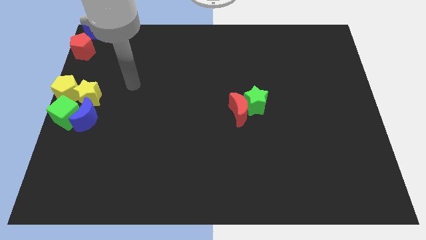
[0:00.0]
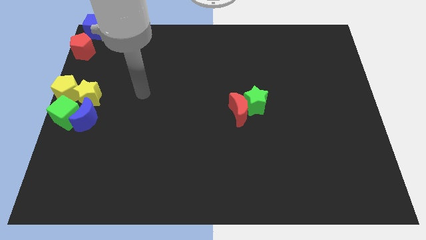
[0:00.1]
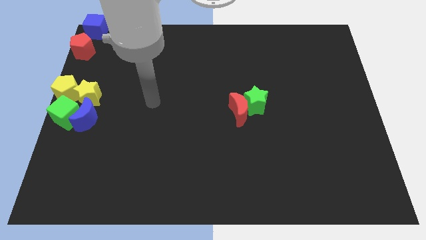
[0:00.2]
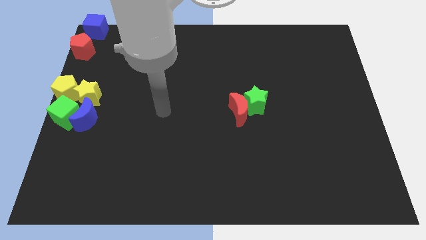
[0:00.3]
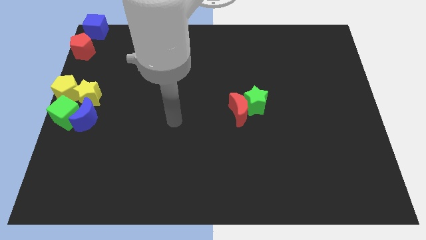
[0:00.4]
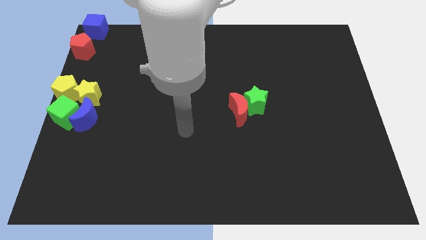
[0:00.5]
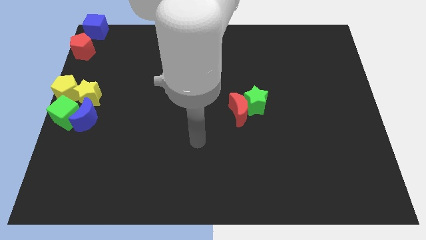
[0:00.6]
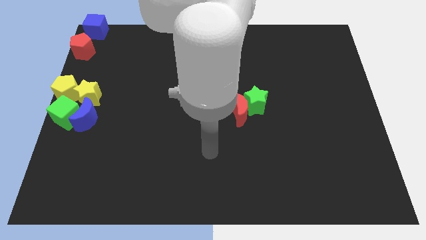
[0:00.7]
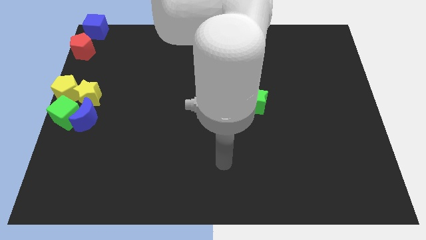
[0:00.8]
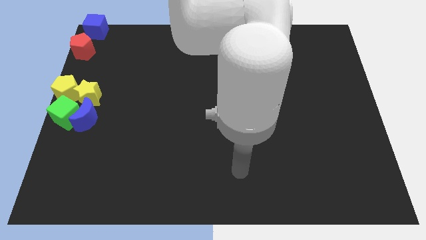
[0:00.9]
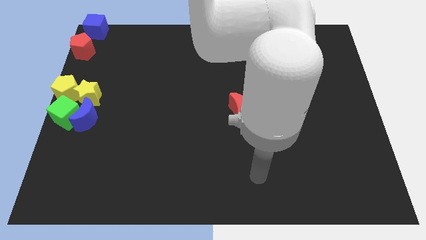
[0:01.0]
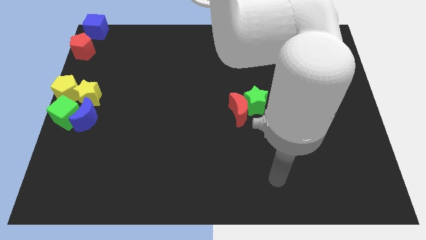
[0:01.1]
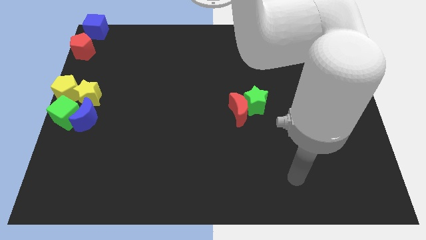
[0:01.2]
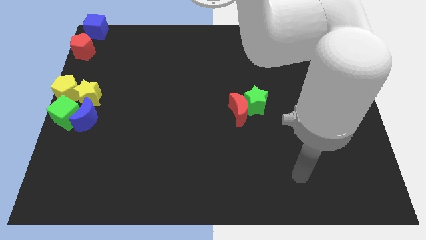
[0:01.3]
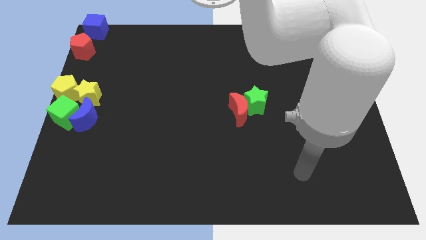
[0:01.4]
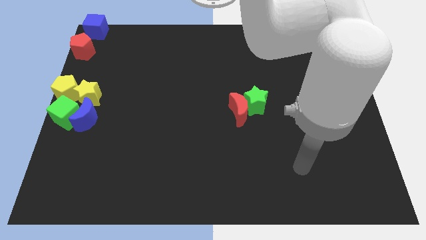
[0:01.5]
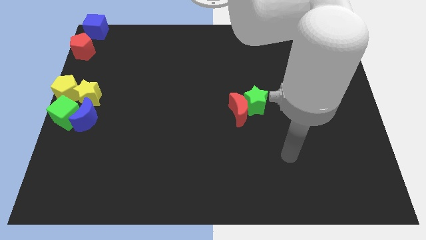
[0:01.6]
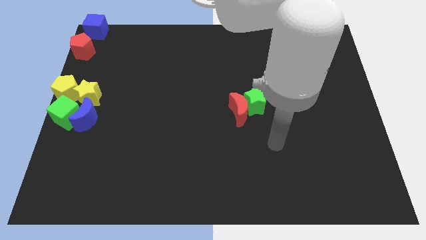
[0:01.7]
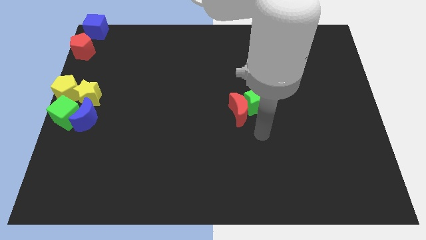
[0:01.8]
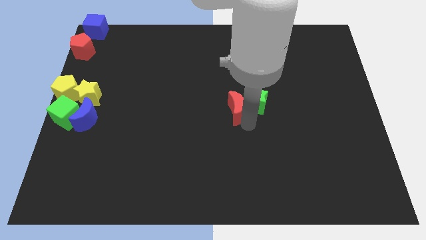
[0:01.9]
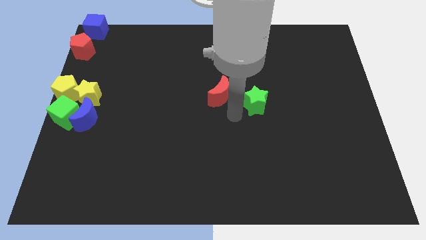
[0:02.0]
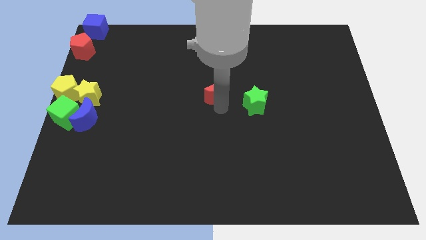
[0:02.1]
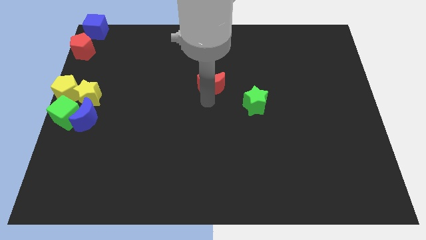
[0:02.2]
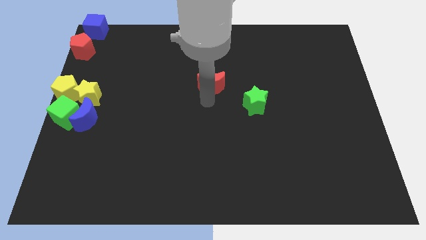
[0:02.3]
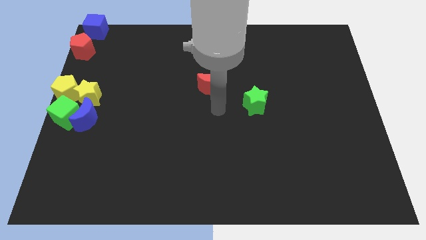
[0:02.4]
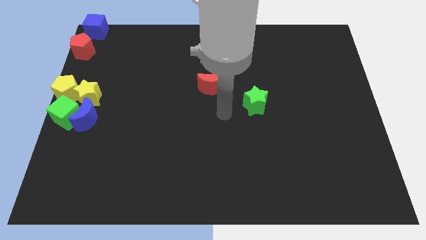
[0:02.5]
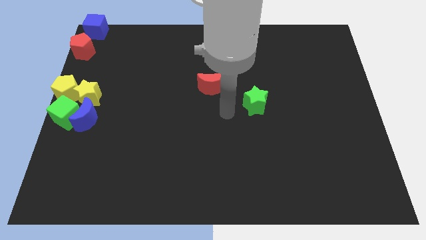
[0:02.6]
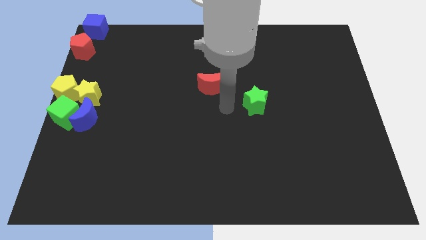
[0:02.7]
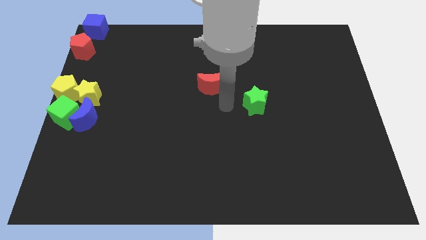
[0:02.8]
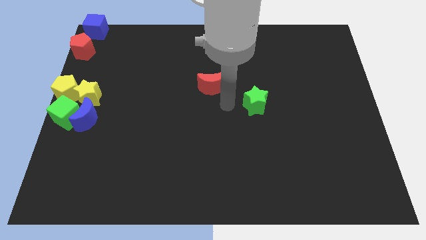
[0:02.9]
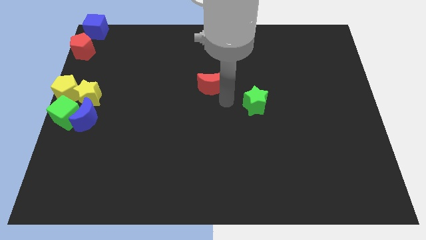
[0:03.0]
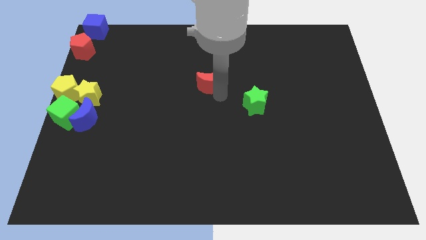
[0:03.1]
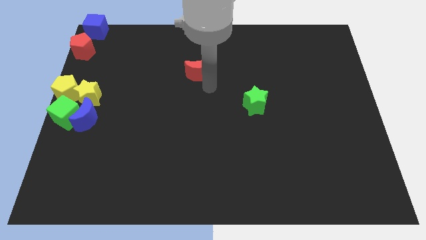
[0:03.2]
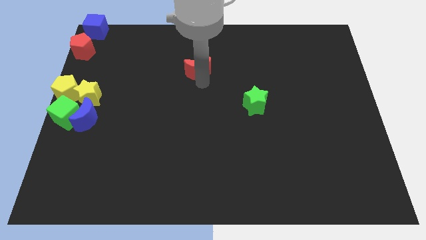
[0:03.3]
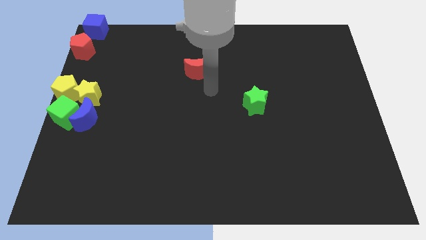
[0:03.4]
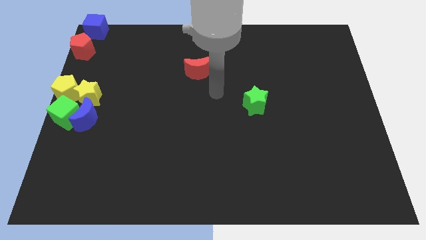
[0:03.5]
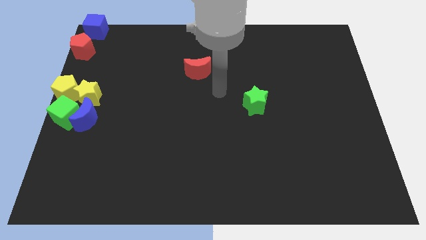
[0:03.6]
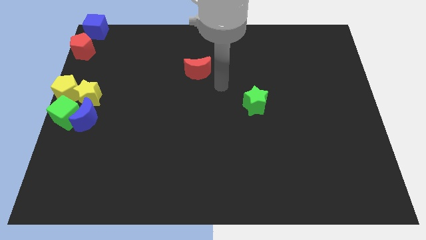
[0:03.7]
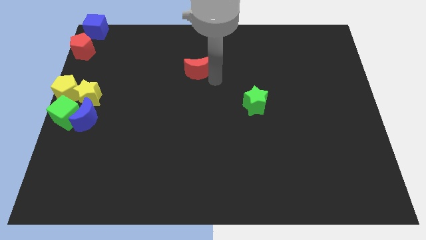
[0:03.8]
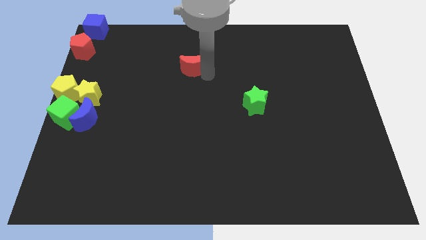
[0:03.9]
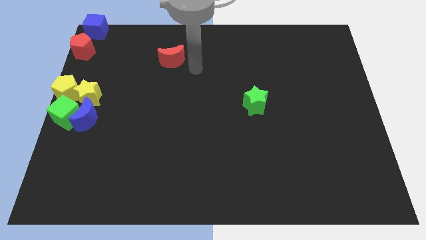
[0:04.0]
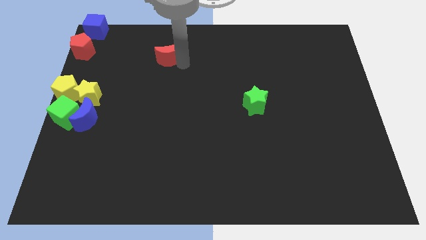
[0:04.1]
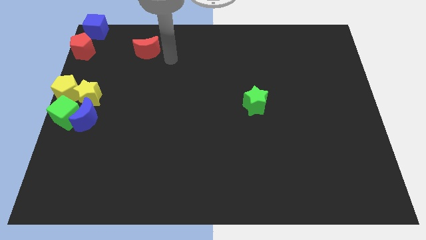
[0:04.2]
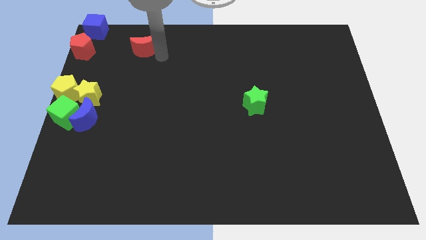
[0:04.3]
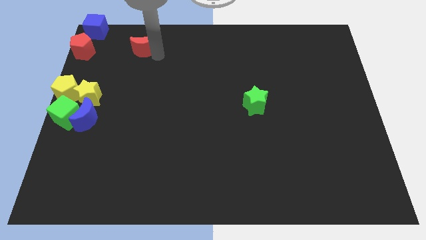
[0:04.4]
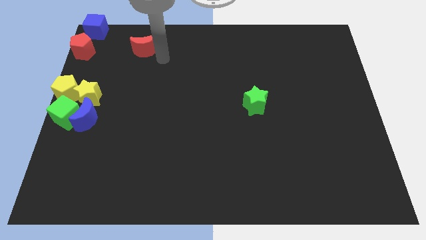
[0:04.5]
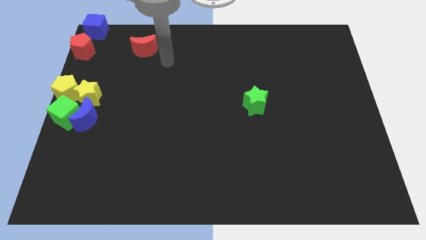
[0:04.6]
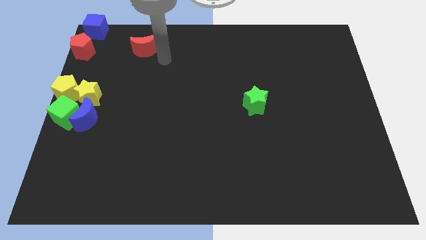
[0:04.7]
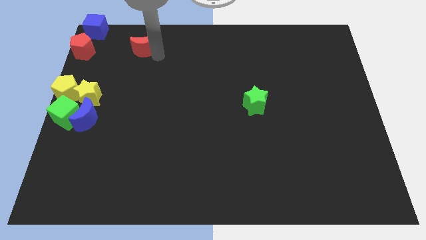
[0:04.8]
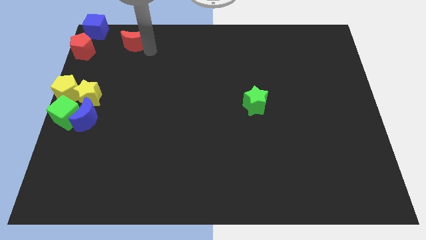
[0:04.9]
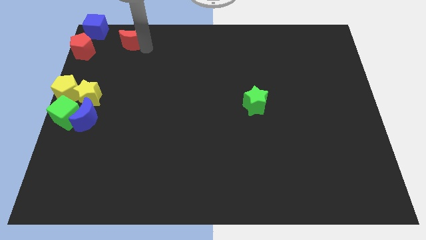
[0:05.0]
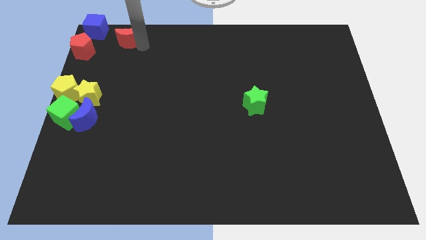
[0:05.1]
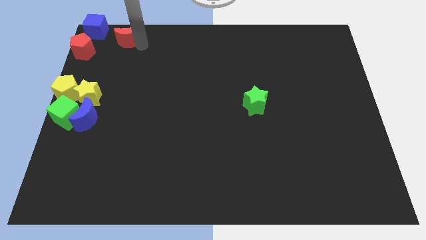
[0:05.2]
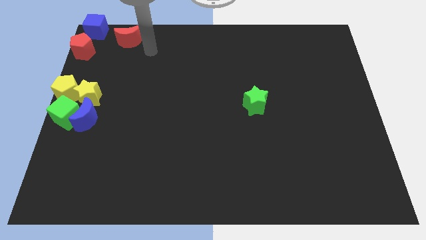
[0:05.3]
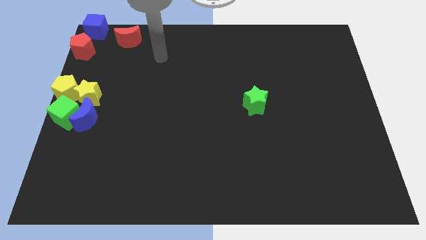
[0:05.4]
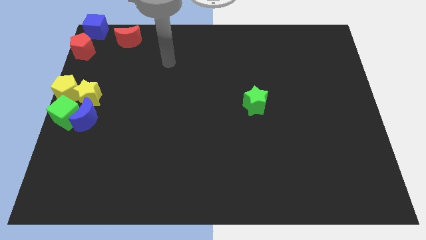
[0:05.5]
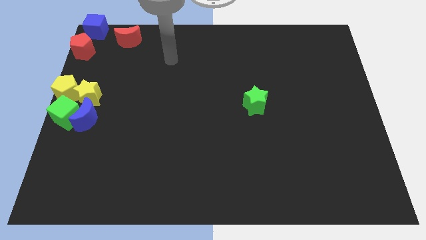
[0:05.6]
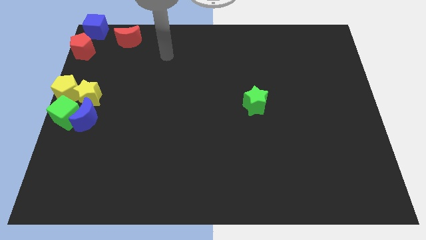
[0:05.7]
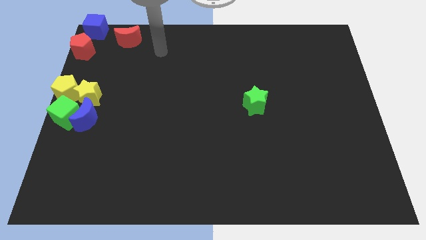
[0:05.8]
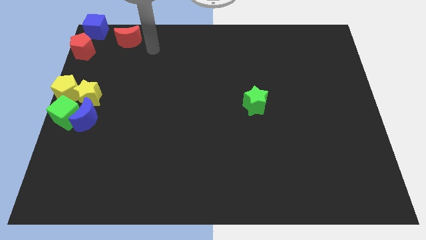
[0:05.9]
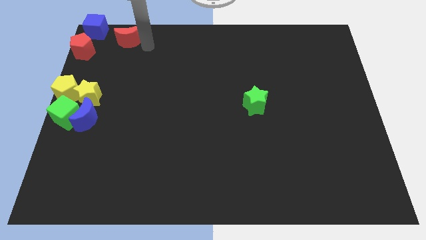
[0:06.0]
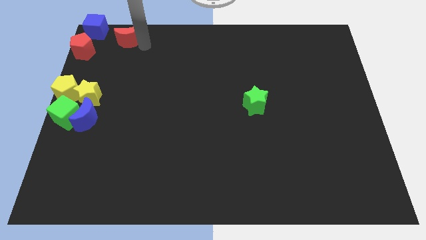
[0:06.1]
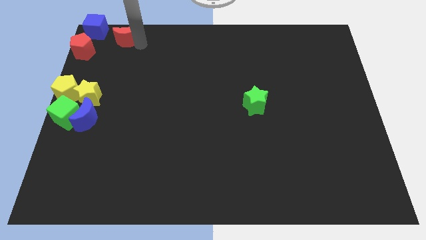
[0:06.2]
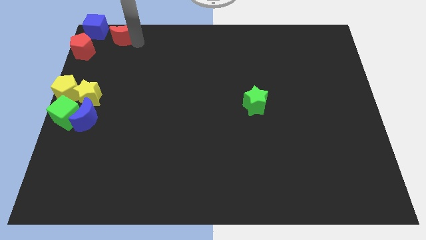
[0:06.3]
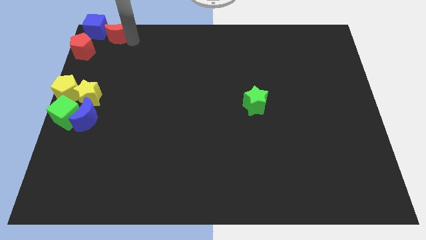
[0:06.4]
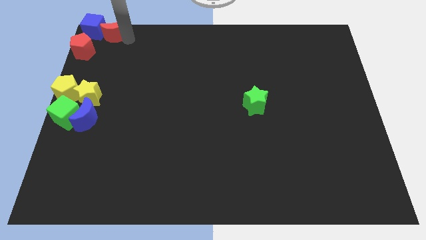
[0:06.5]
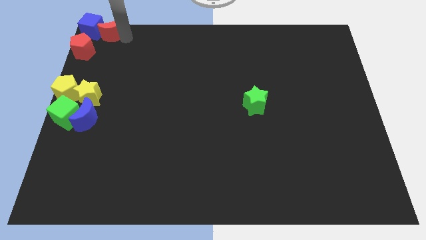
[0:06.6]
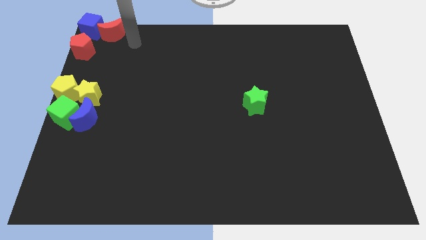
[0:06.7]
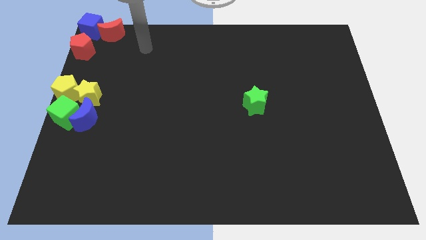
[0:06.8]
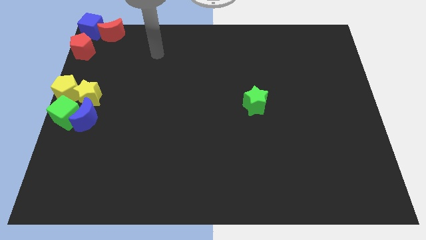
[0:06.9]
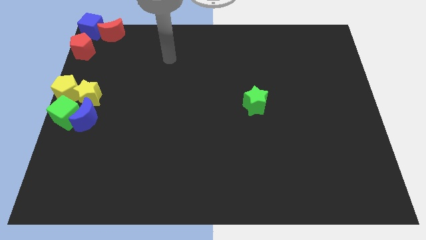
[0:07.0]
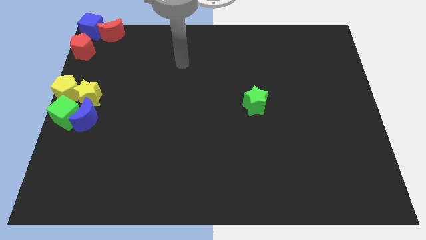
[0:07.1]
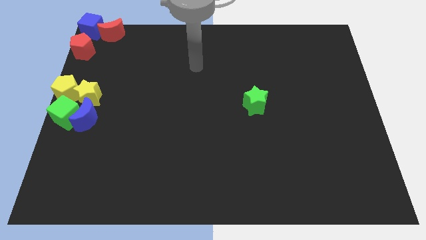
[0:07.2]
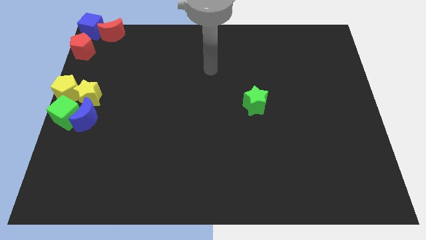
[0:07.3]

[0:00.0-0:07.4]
move the red crescent into the right of the blue cube

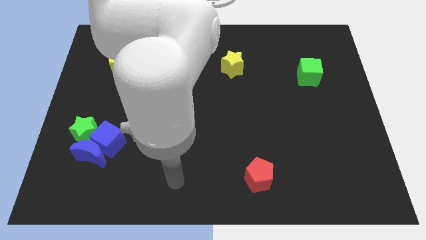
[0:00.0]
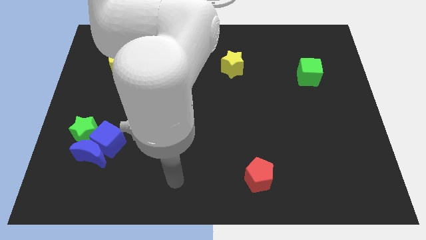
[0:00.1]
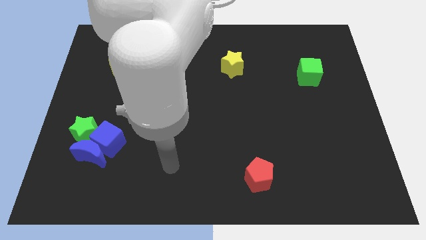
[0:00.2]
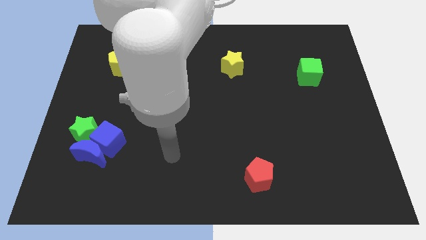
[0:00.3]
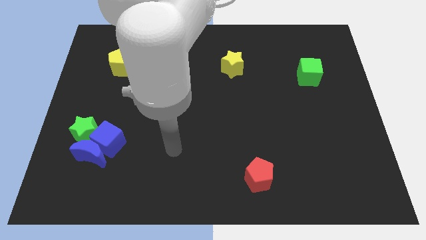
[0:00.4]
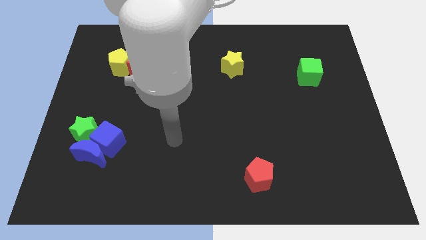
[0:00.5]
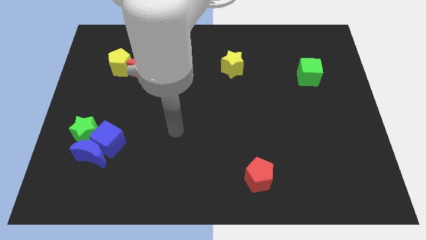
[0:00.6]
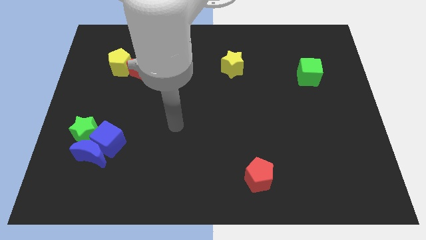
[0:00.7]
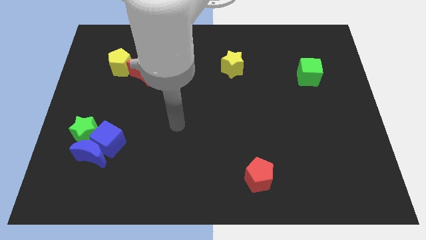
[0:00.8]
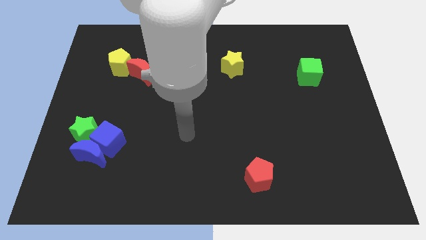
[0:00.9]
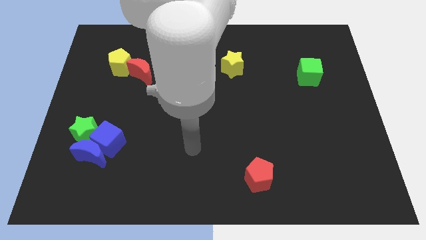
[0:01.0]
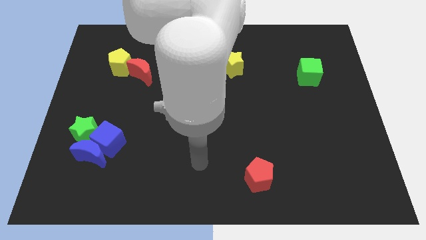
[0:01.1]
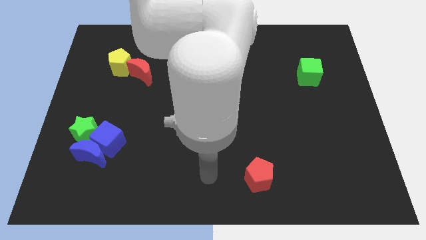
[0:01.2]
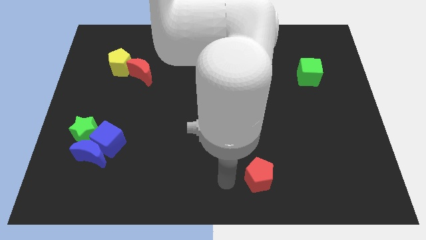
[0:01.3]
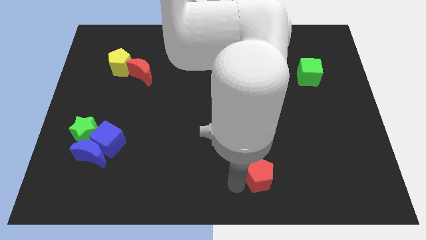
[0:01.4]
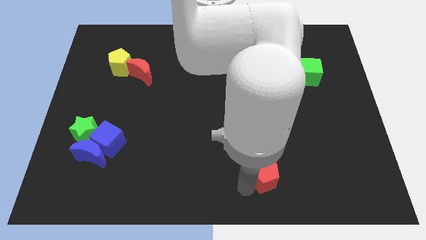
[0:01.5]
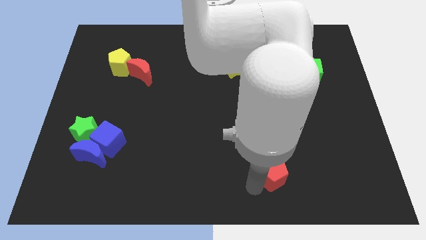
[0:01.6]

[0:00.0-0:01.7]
move the red pentagon slightly to the right
